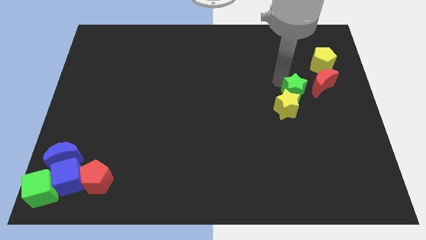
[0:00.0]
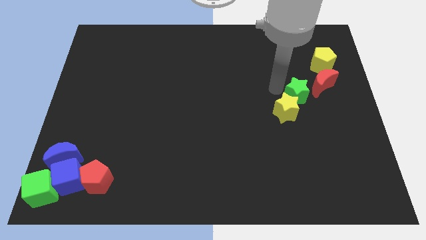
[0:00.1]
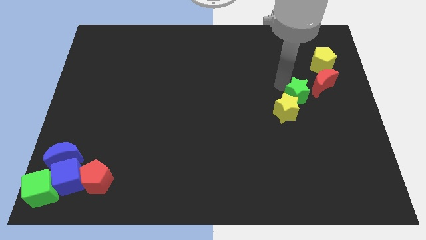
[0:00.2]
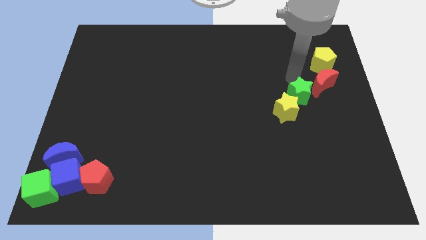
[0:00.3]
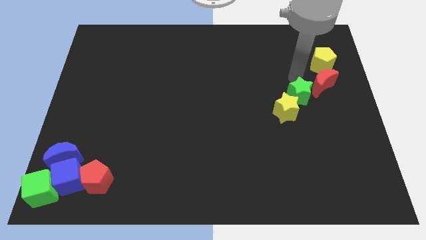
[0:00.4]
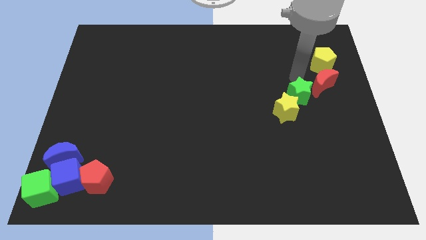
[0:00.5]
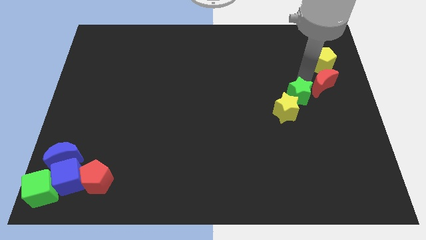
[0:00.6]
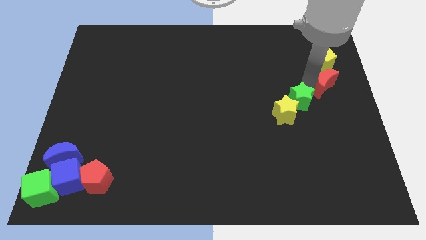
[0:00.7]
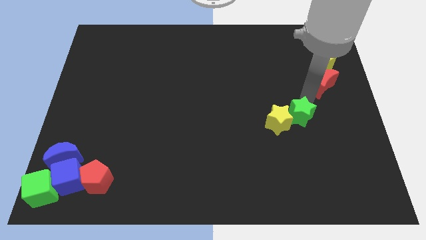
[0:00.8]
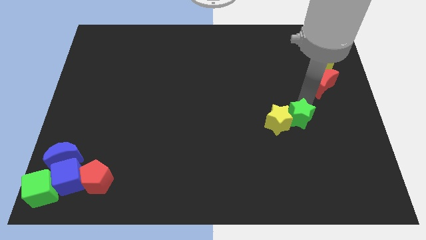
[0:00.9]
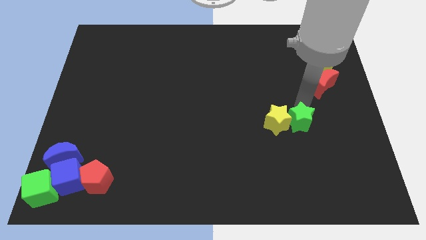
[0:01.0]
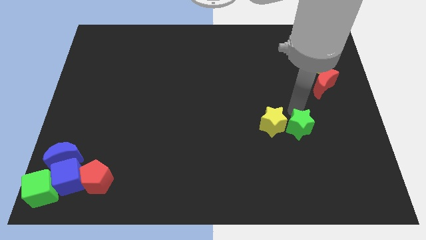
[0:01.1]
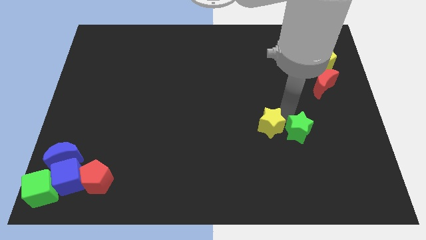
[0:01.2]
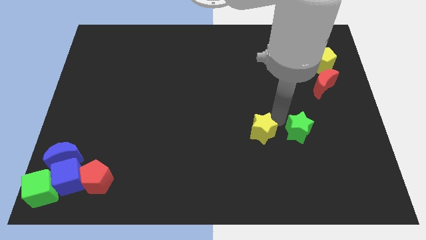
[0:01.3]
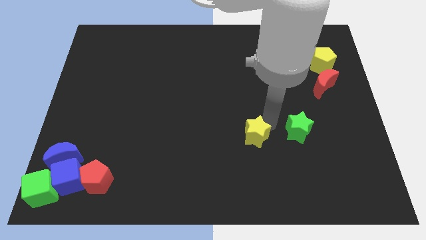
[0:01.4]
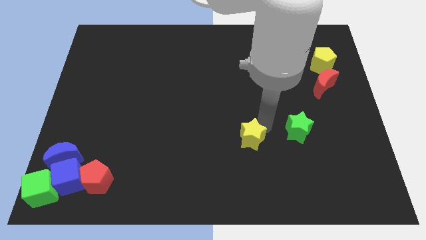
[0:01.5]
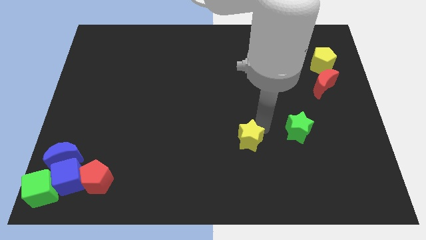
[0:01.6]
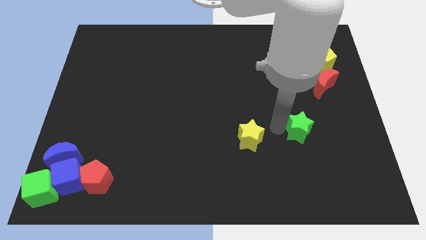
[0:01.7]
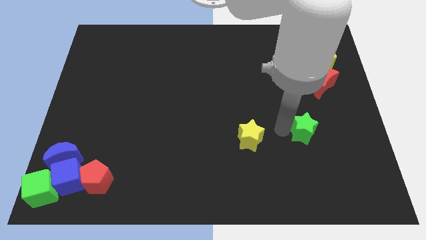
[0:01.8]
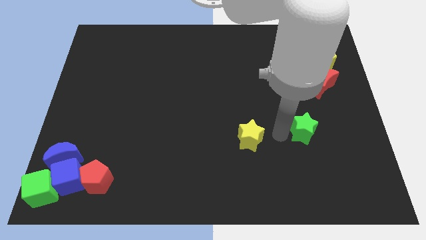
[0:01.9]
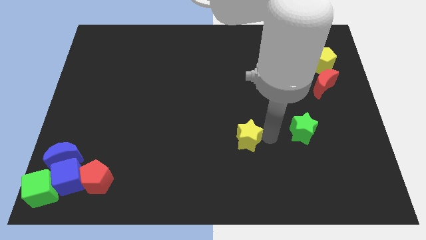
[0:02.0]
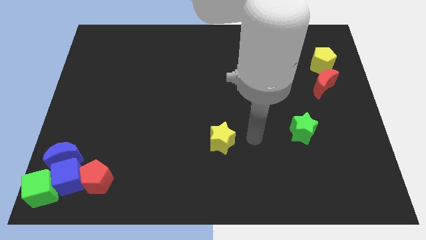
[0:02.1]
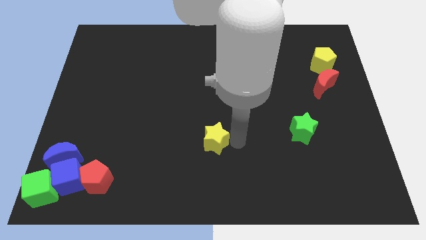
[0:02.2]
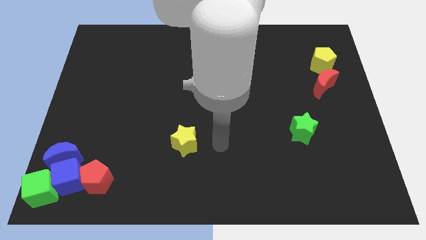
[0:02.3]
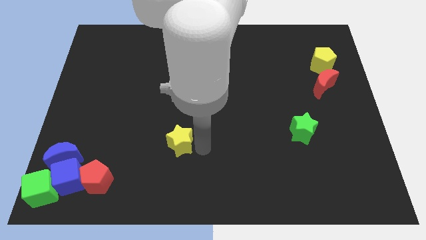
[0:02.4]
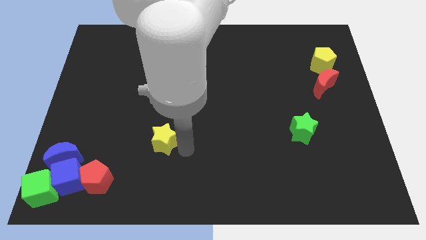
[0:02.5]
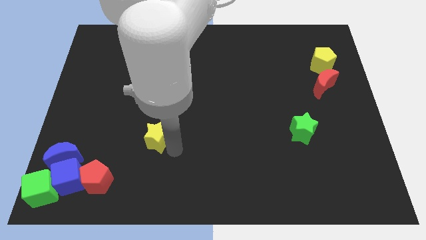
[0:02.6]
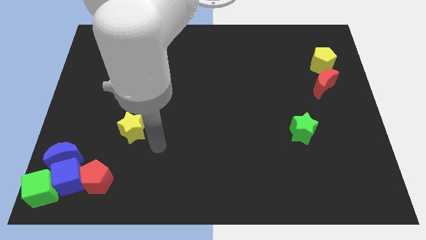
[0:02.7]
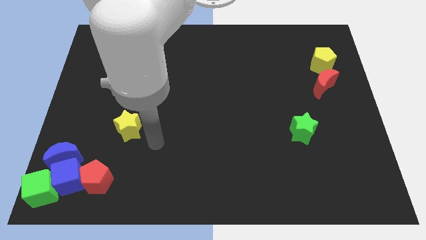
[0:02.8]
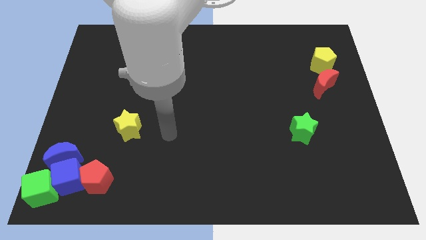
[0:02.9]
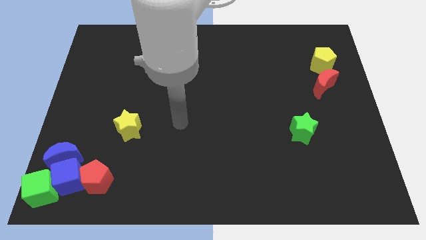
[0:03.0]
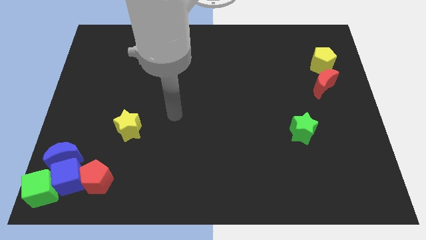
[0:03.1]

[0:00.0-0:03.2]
separate yellow star and green star

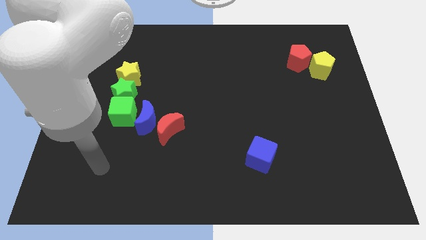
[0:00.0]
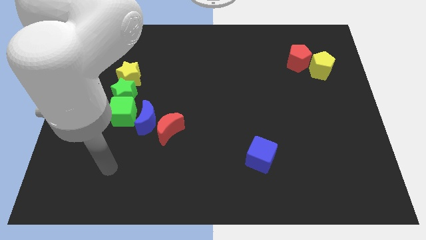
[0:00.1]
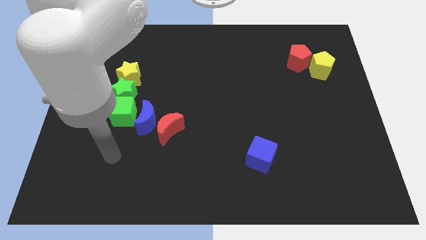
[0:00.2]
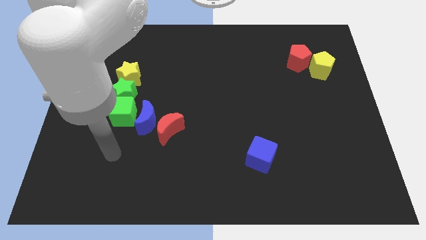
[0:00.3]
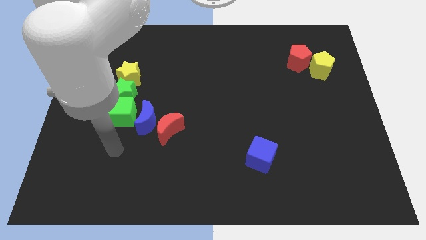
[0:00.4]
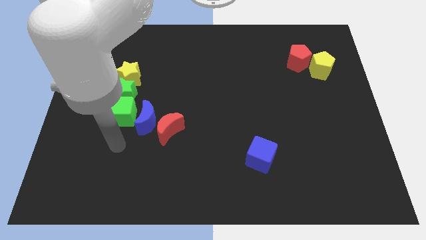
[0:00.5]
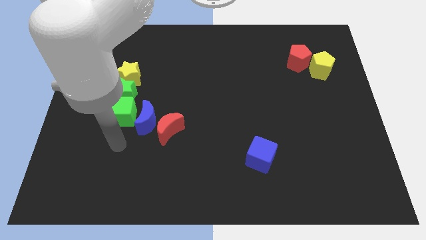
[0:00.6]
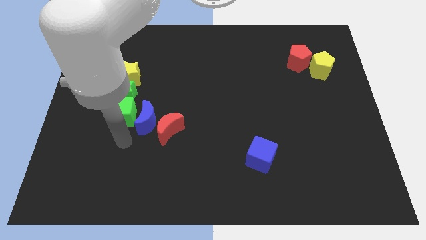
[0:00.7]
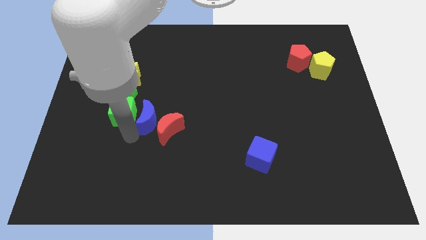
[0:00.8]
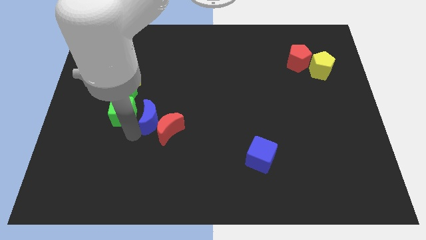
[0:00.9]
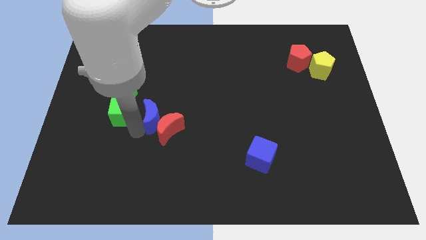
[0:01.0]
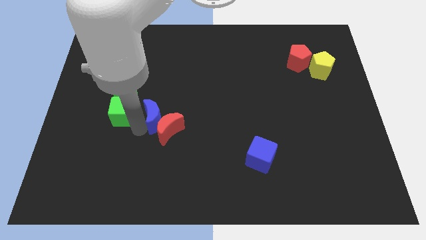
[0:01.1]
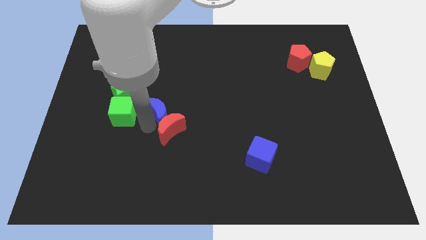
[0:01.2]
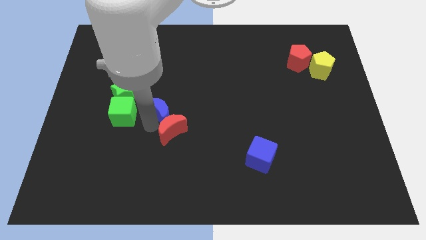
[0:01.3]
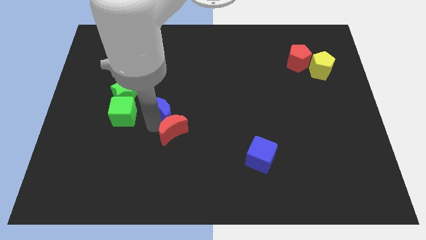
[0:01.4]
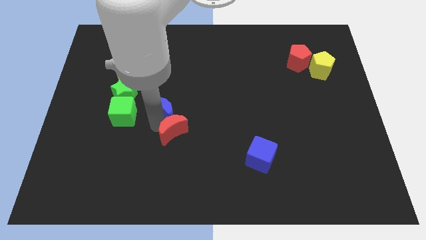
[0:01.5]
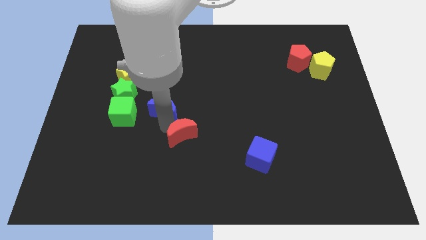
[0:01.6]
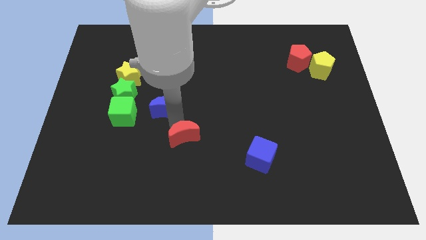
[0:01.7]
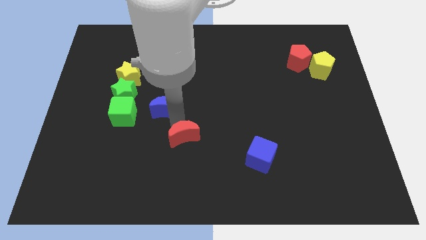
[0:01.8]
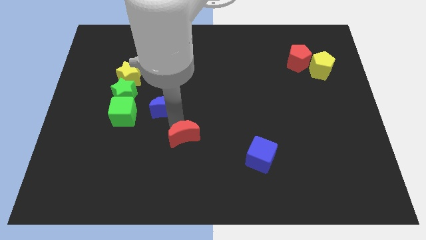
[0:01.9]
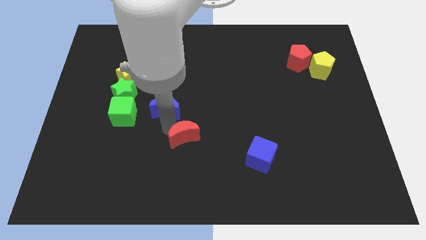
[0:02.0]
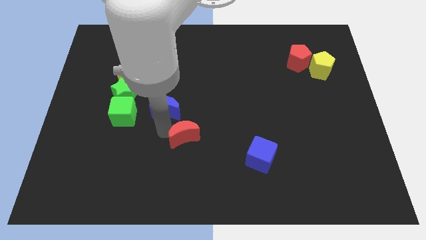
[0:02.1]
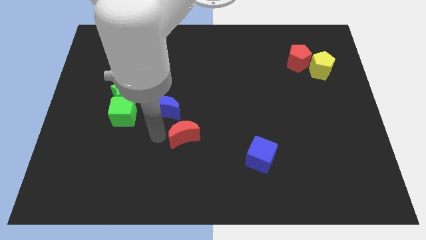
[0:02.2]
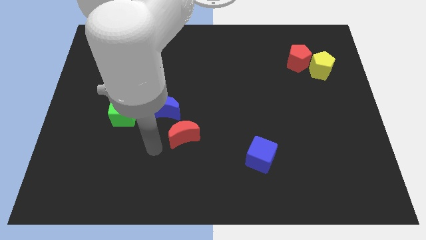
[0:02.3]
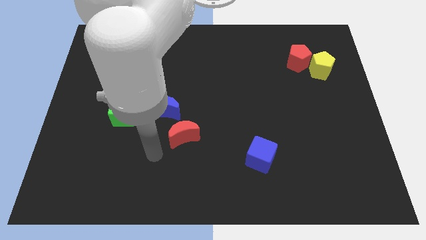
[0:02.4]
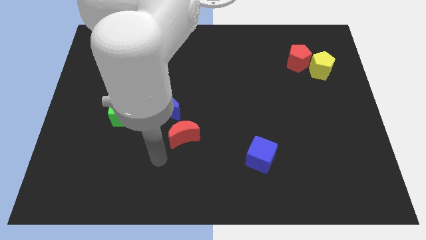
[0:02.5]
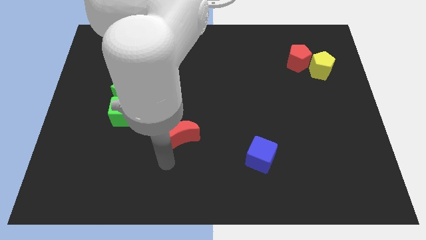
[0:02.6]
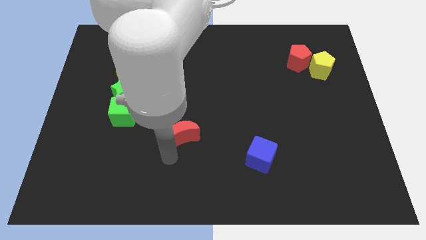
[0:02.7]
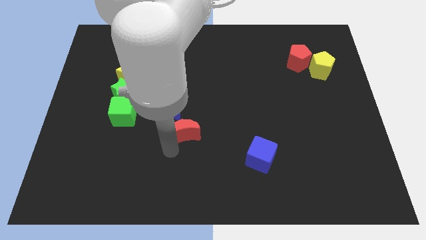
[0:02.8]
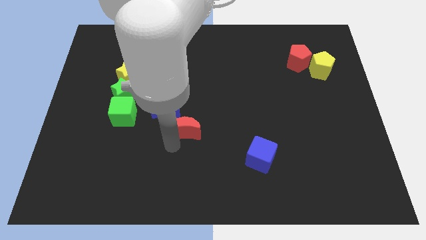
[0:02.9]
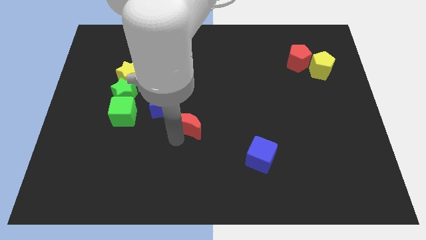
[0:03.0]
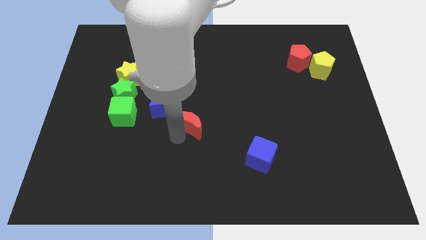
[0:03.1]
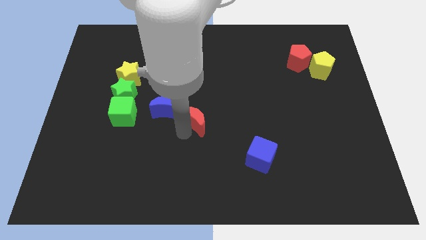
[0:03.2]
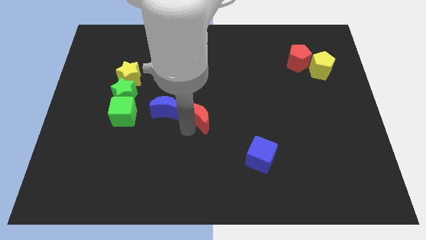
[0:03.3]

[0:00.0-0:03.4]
push the red and blue moon towards the top side

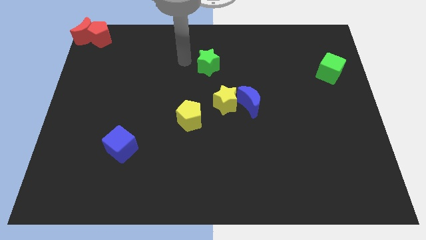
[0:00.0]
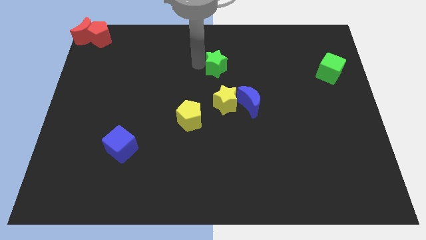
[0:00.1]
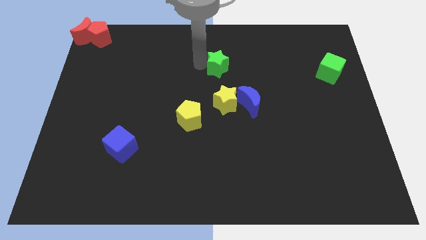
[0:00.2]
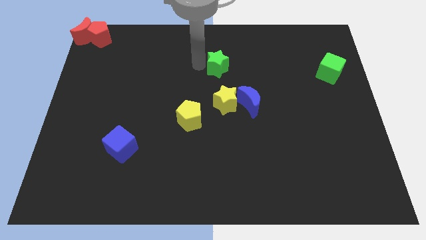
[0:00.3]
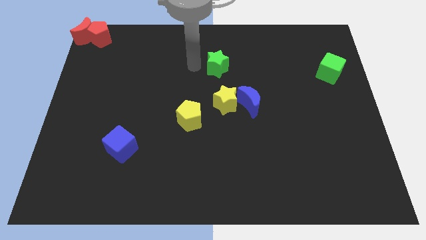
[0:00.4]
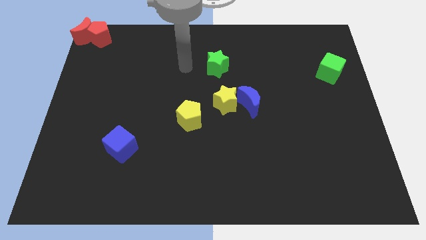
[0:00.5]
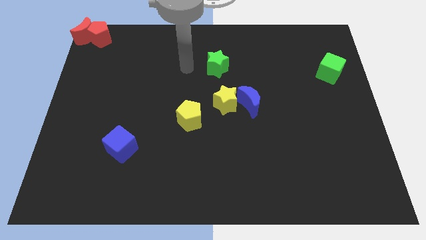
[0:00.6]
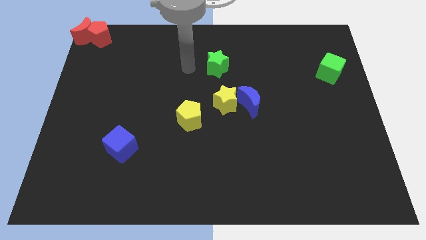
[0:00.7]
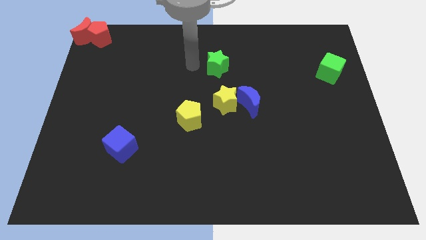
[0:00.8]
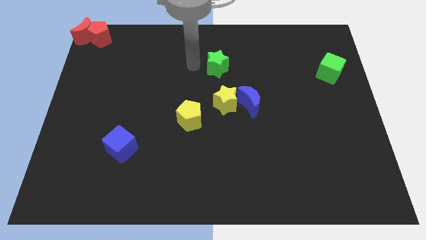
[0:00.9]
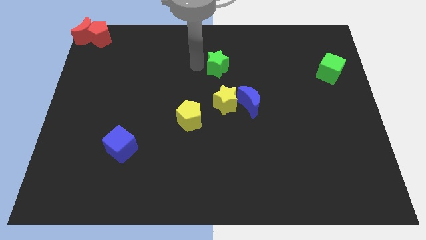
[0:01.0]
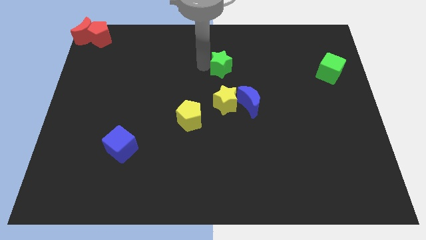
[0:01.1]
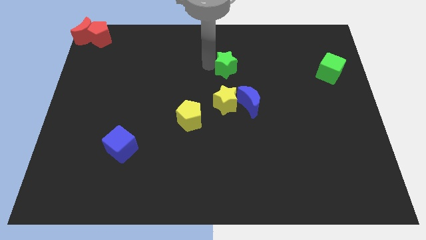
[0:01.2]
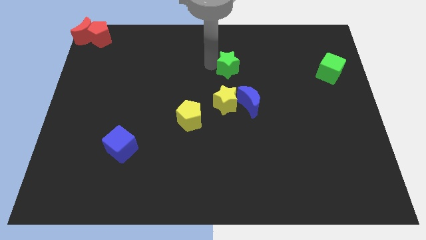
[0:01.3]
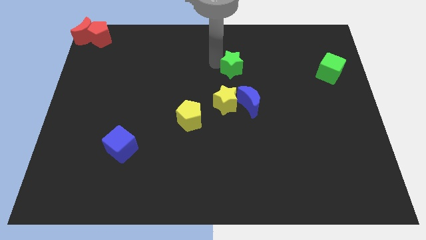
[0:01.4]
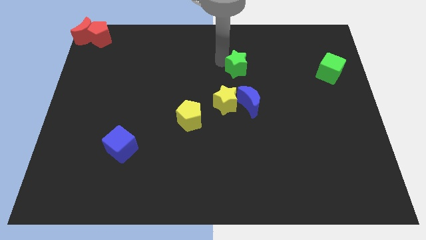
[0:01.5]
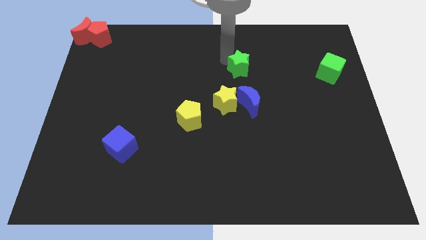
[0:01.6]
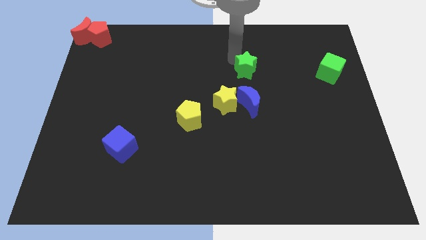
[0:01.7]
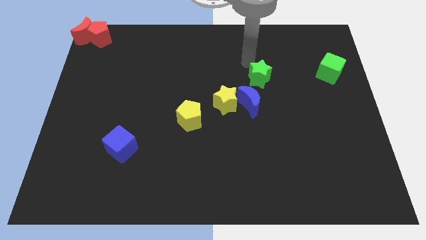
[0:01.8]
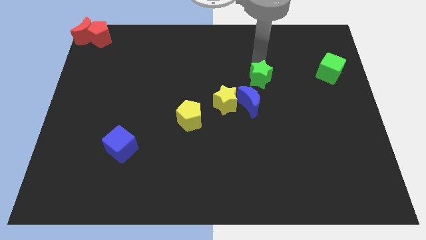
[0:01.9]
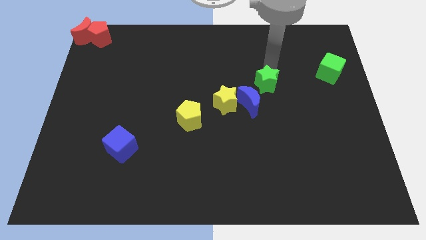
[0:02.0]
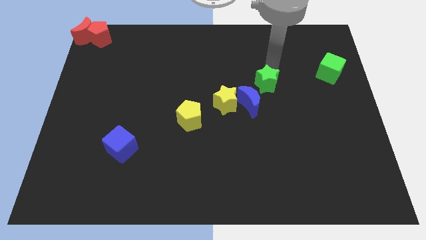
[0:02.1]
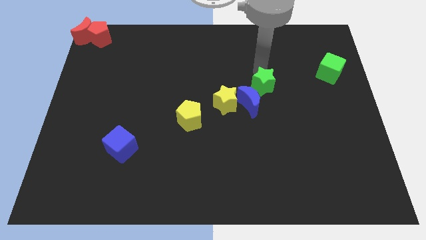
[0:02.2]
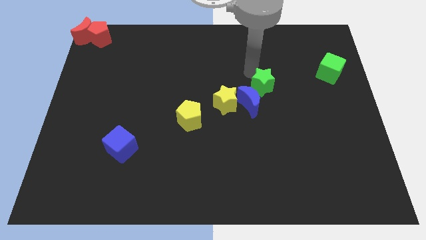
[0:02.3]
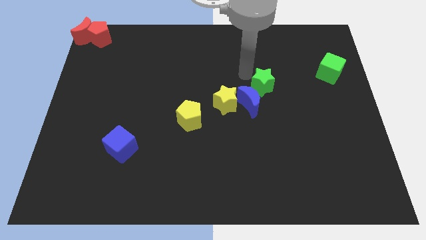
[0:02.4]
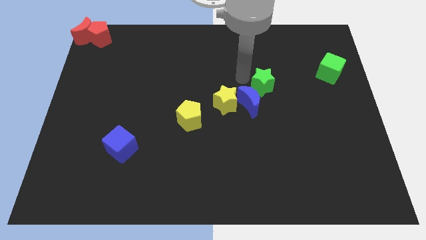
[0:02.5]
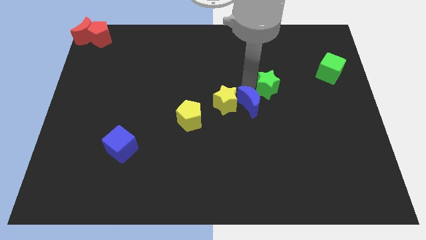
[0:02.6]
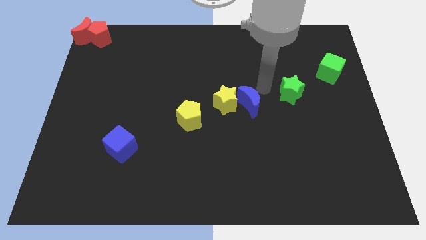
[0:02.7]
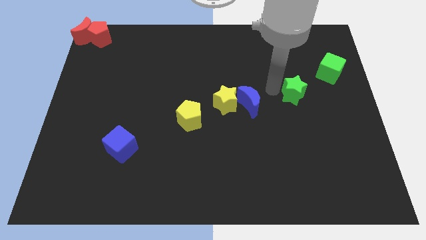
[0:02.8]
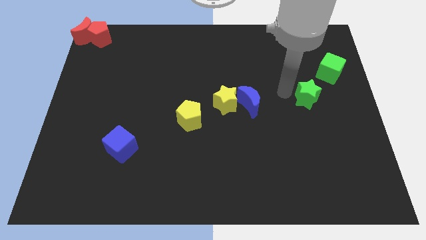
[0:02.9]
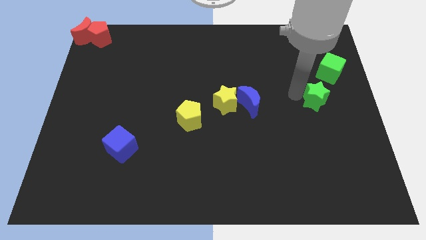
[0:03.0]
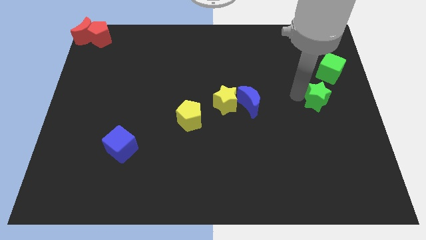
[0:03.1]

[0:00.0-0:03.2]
place the green star below the green cube
